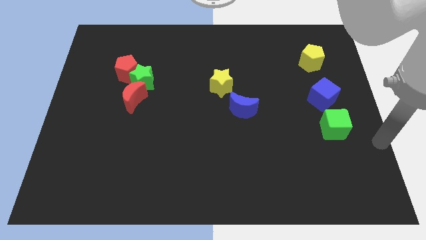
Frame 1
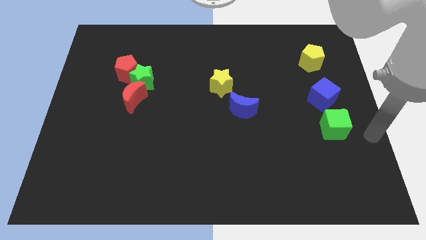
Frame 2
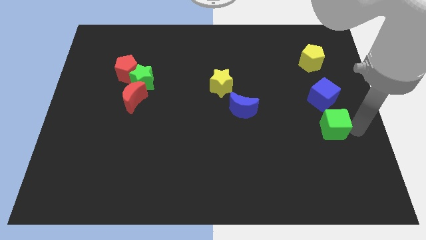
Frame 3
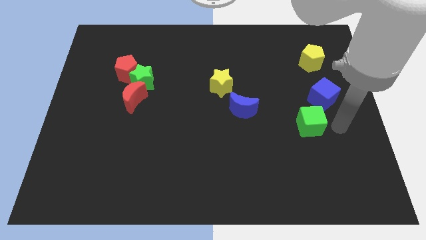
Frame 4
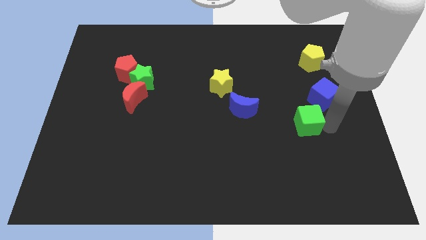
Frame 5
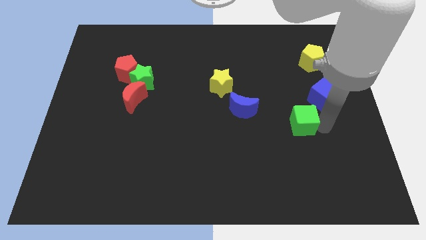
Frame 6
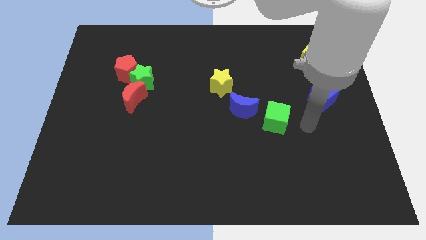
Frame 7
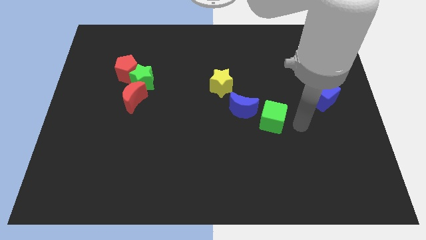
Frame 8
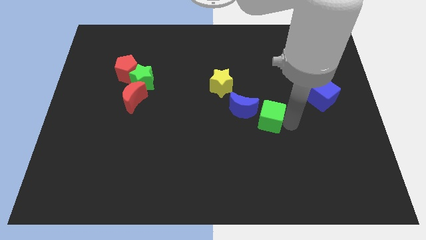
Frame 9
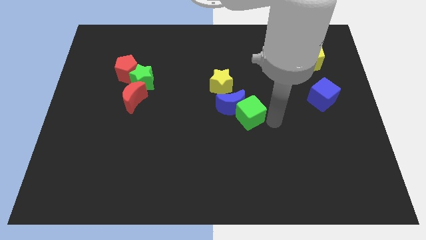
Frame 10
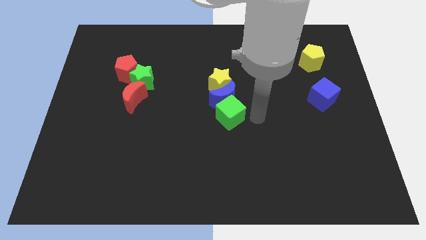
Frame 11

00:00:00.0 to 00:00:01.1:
push the green cube with blue crescent to the center of the board

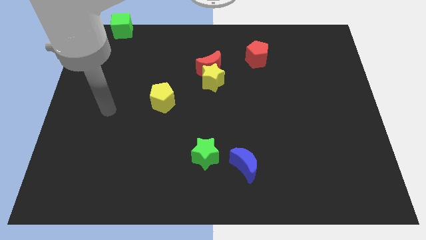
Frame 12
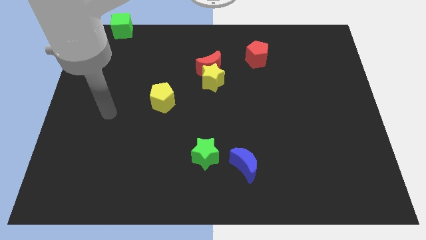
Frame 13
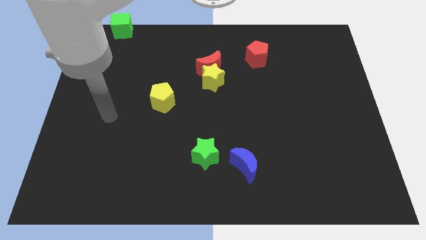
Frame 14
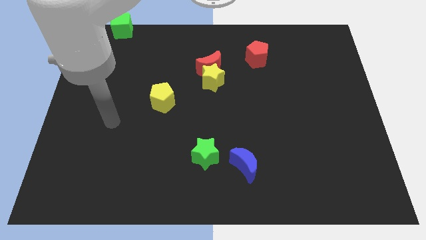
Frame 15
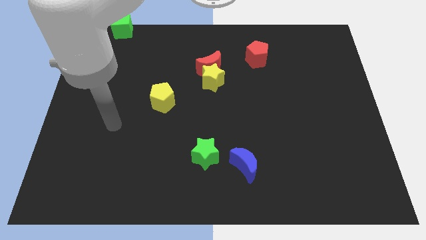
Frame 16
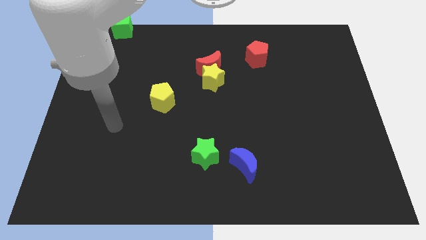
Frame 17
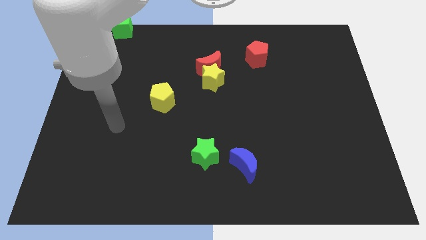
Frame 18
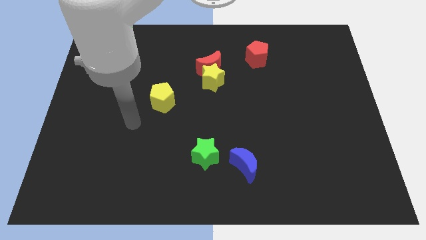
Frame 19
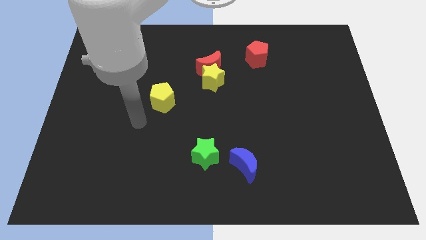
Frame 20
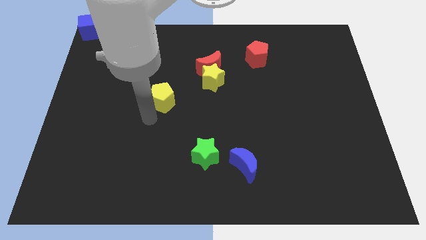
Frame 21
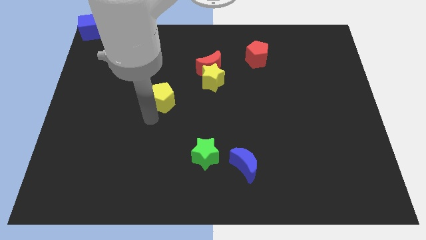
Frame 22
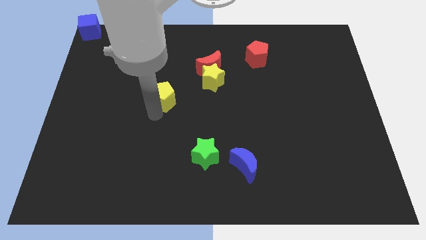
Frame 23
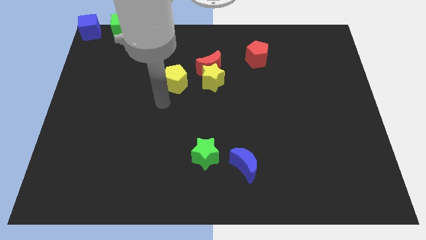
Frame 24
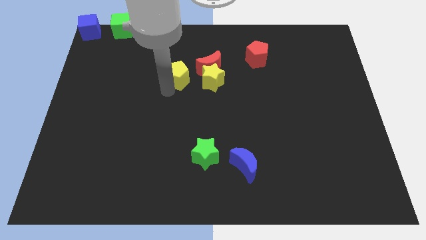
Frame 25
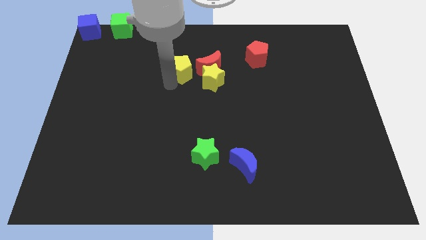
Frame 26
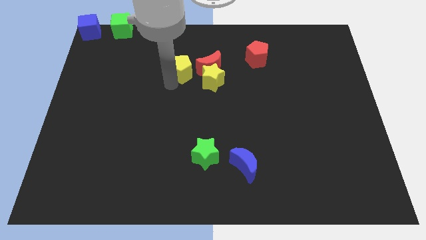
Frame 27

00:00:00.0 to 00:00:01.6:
put the yellow pentagon left to the red moon

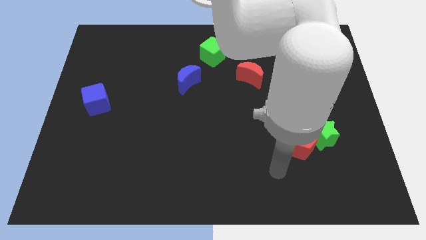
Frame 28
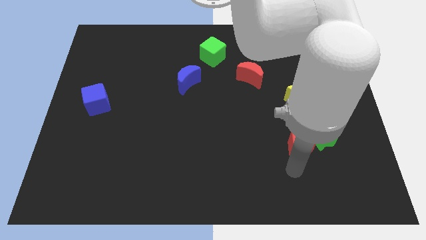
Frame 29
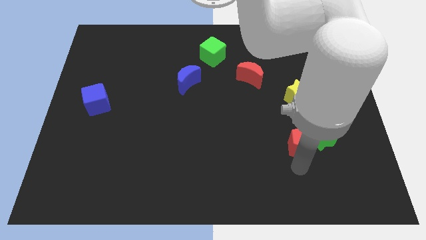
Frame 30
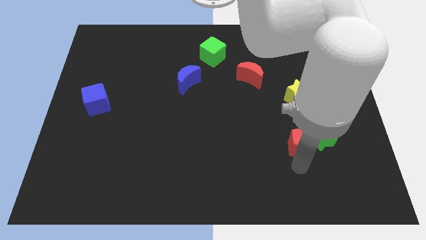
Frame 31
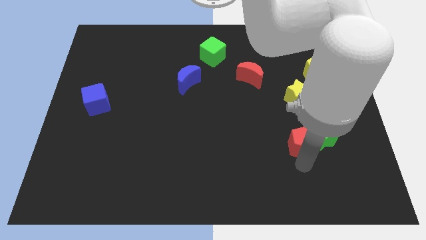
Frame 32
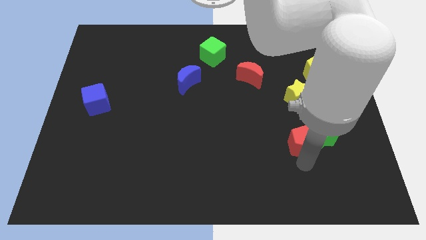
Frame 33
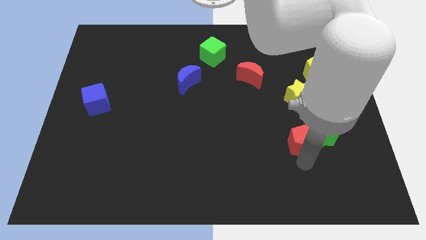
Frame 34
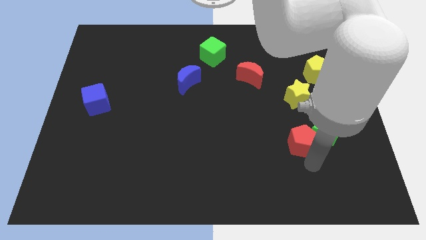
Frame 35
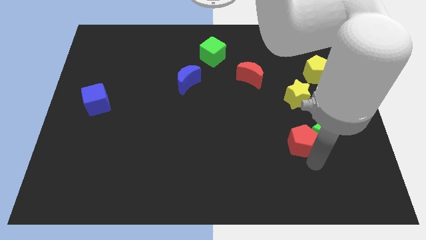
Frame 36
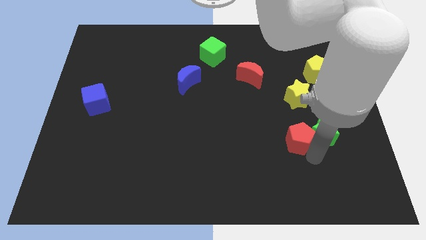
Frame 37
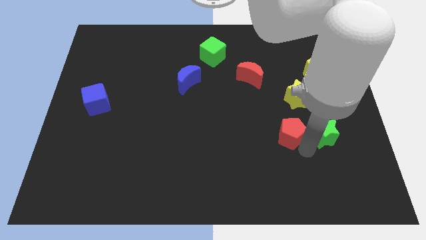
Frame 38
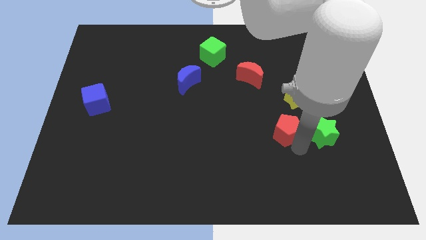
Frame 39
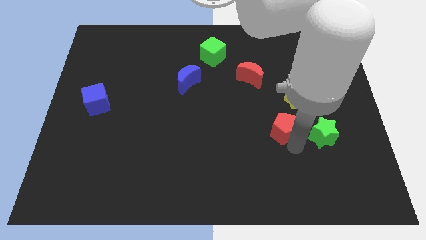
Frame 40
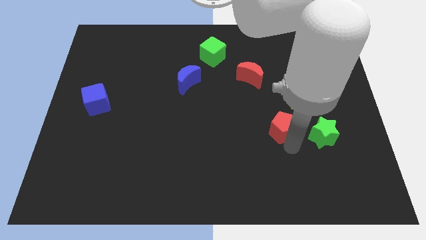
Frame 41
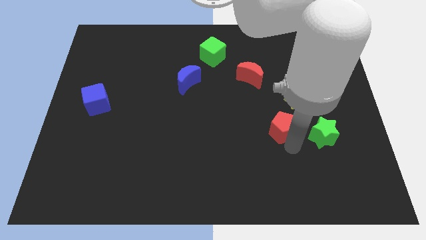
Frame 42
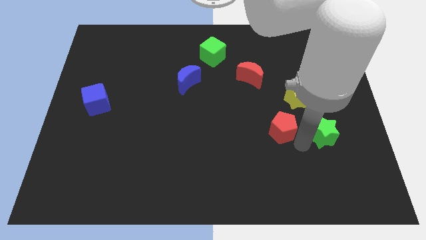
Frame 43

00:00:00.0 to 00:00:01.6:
separate the red pentagon from the green star

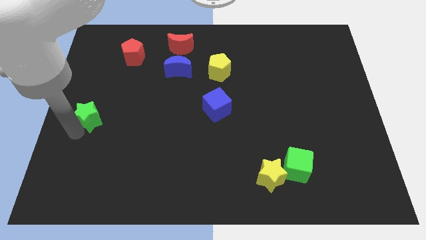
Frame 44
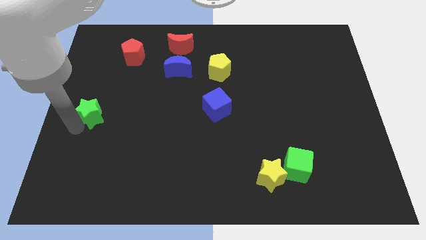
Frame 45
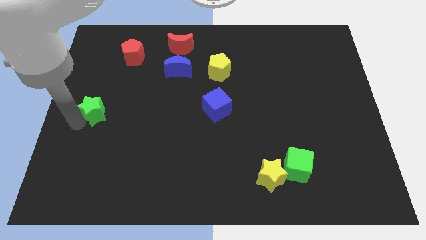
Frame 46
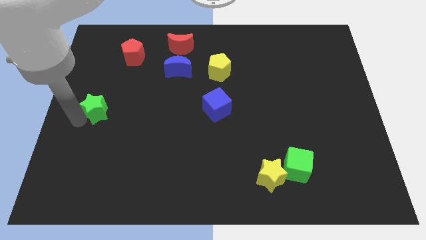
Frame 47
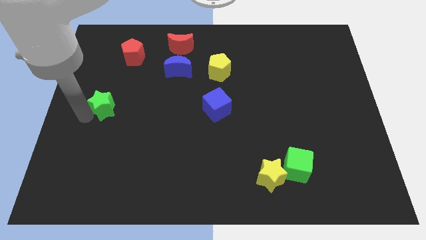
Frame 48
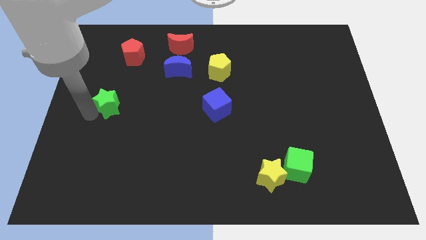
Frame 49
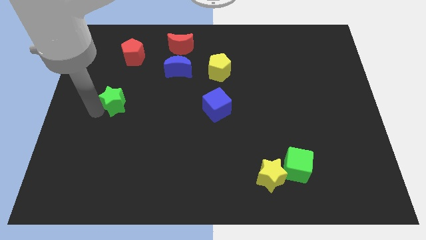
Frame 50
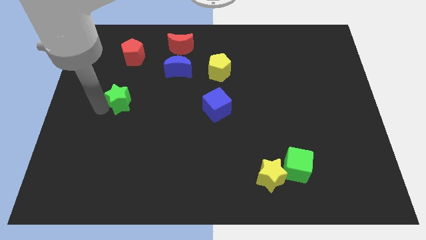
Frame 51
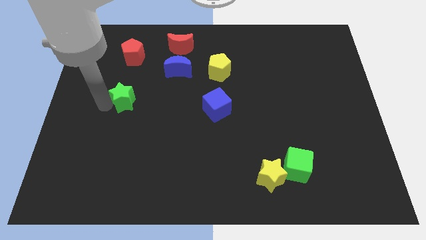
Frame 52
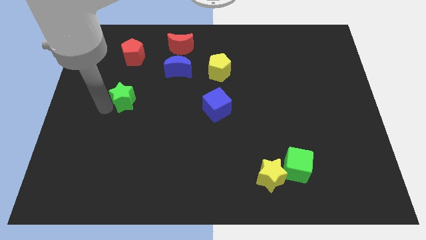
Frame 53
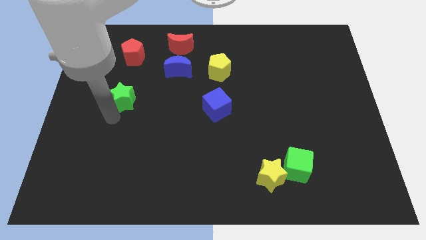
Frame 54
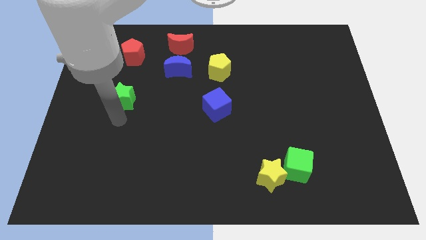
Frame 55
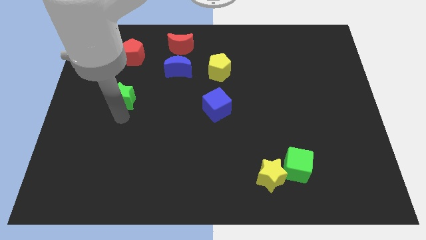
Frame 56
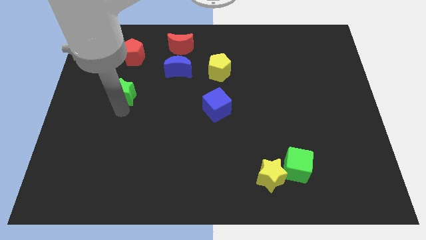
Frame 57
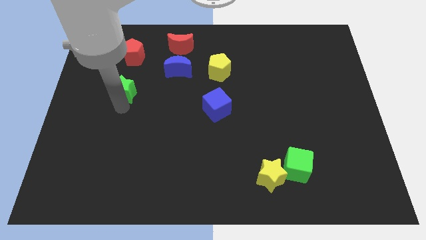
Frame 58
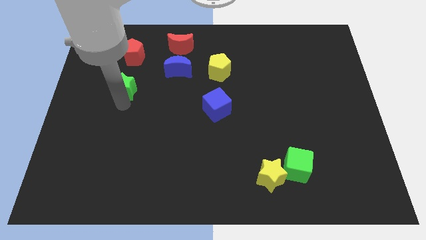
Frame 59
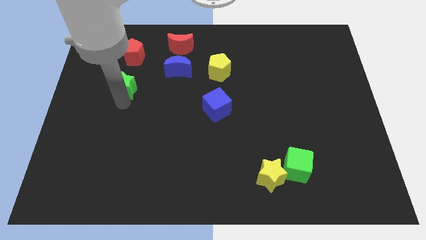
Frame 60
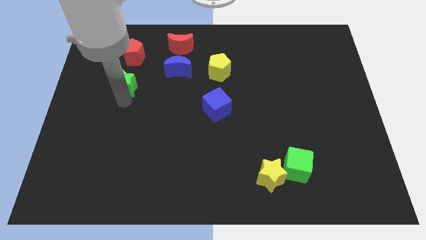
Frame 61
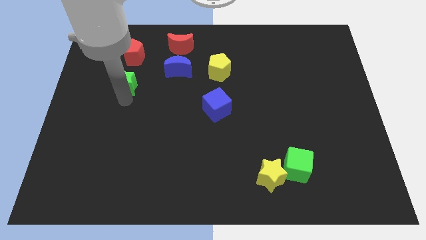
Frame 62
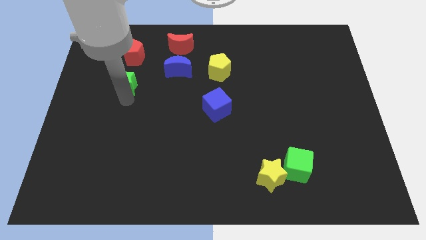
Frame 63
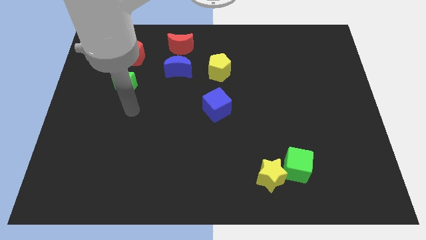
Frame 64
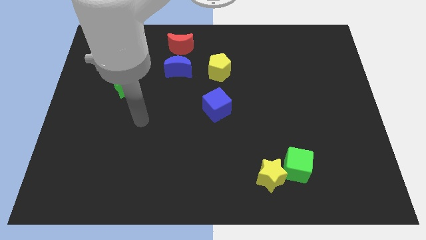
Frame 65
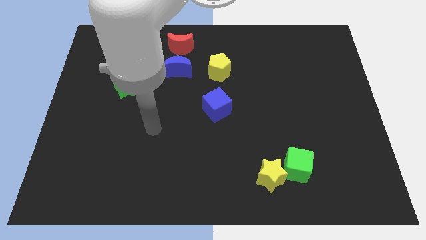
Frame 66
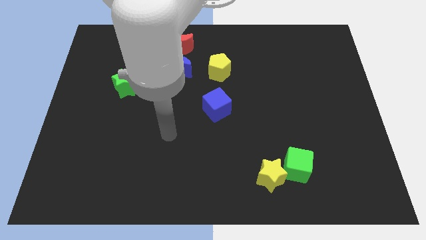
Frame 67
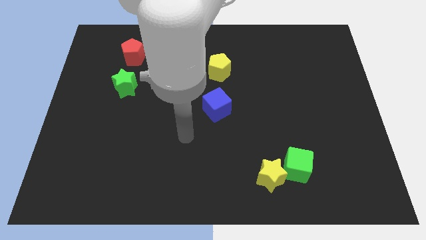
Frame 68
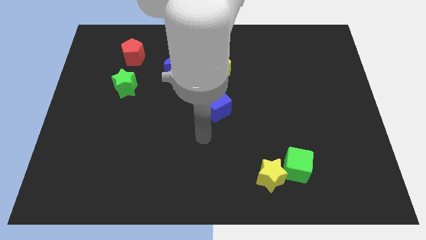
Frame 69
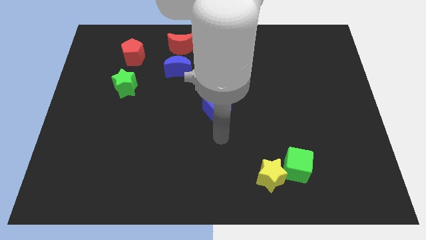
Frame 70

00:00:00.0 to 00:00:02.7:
place the green star below the red pentagon

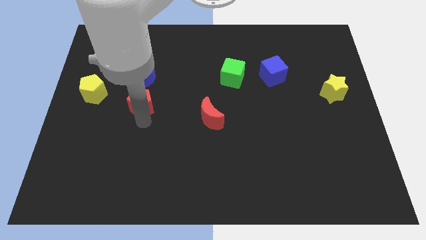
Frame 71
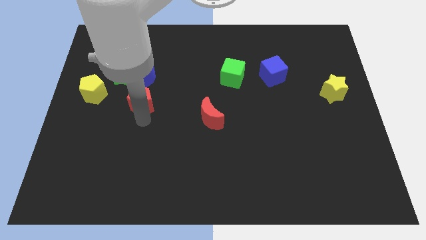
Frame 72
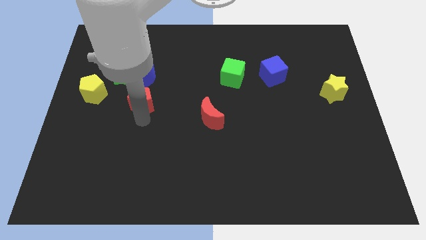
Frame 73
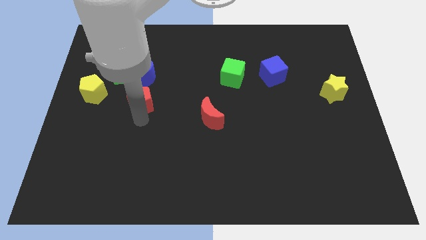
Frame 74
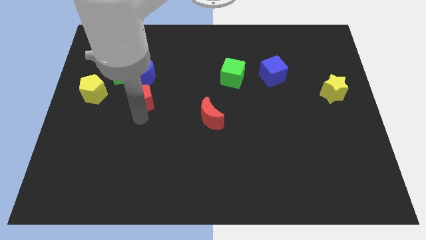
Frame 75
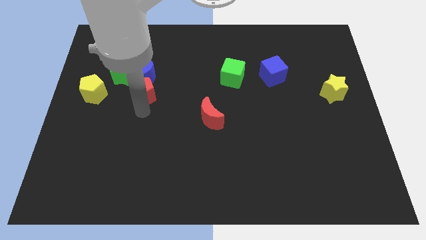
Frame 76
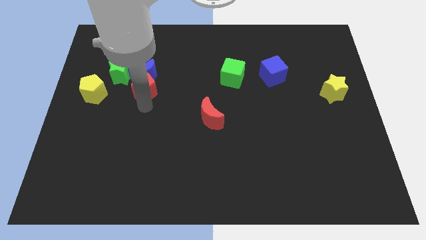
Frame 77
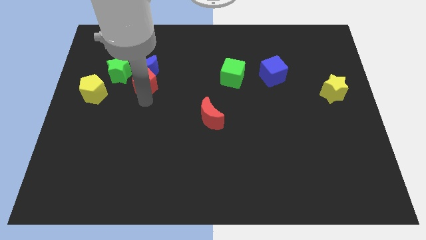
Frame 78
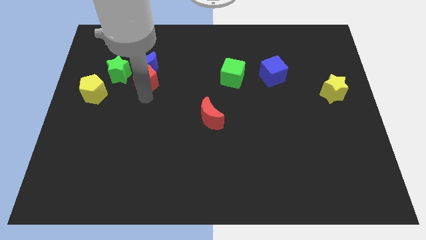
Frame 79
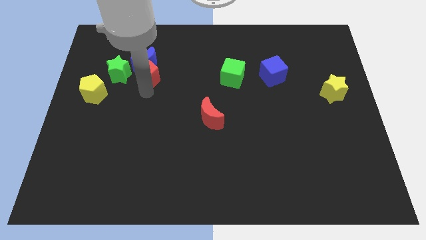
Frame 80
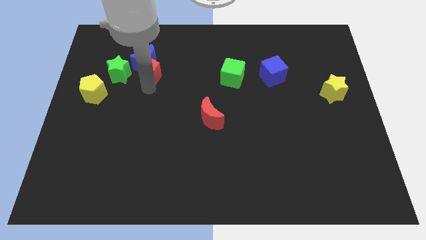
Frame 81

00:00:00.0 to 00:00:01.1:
slide red pentagon into blue moon

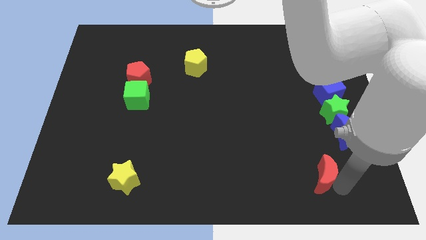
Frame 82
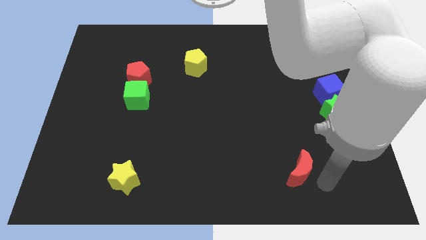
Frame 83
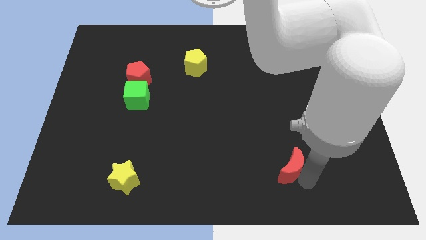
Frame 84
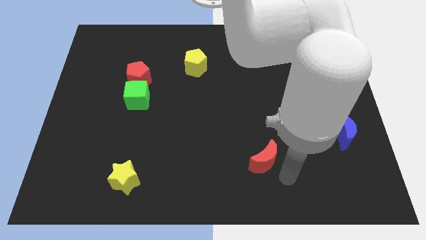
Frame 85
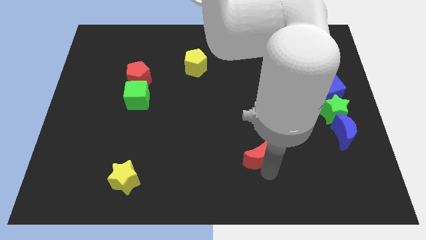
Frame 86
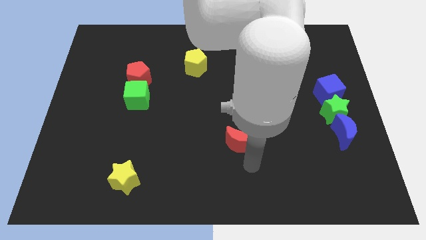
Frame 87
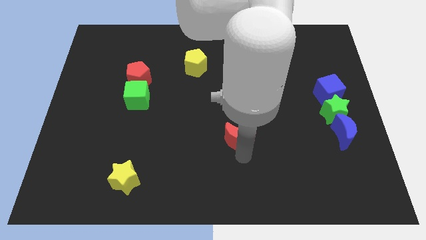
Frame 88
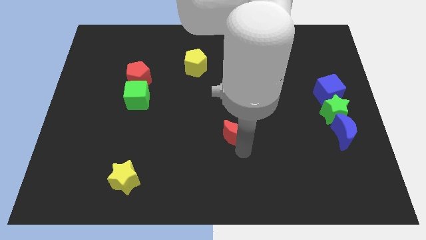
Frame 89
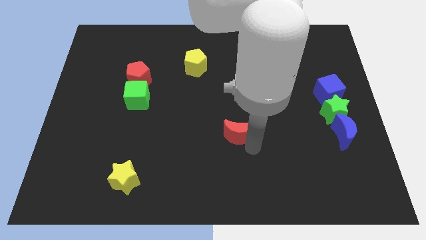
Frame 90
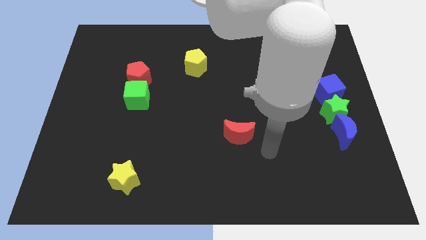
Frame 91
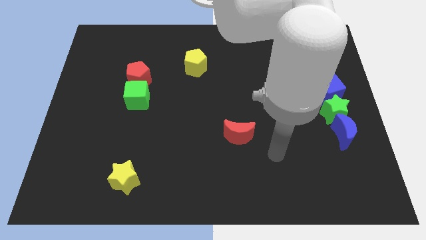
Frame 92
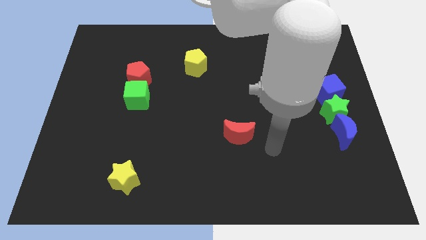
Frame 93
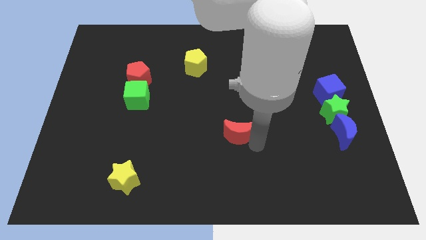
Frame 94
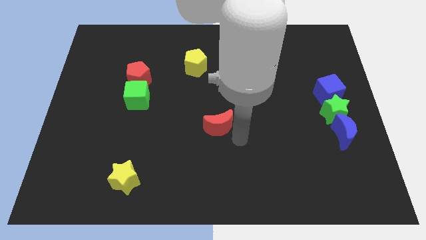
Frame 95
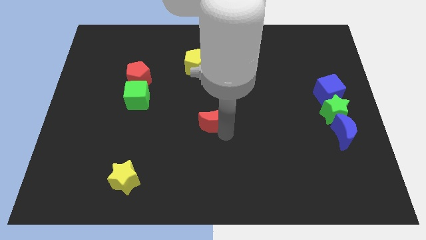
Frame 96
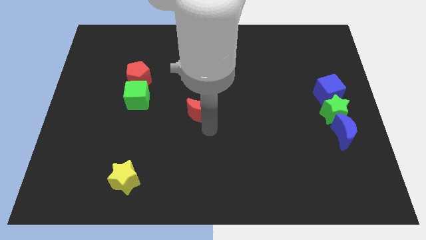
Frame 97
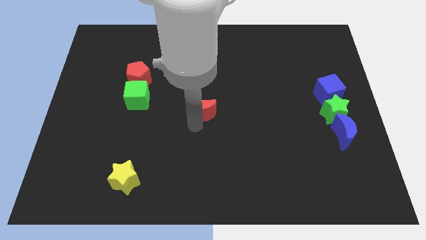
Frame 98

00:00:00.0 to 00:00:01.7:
drag red moon to the middle of the board
